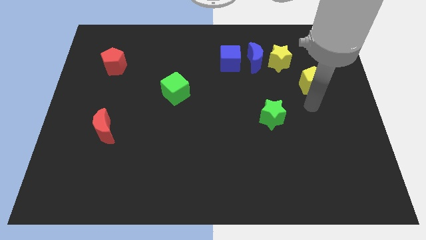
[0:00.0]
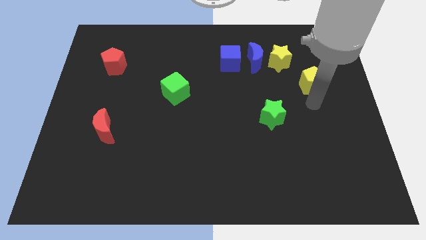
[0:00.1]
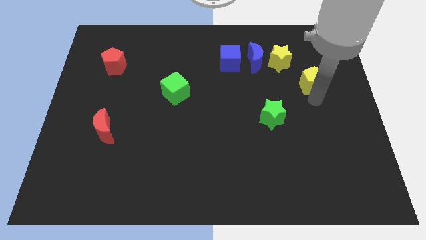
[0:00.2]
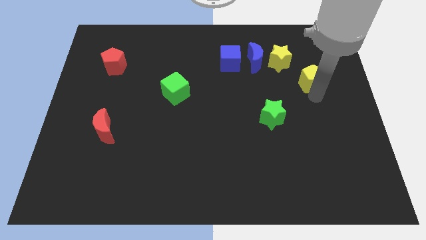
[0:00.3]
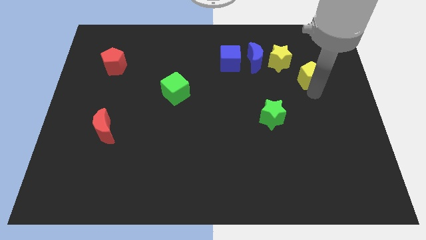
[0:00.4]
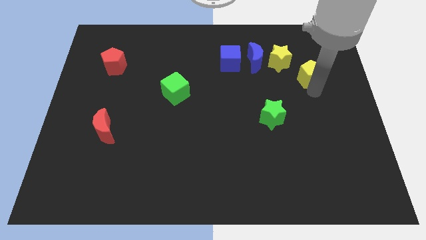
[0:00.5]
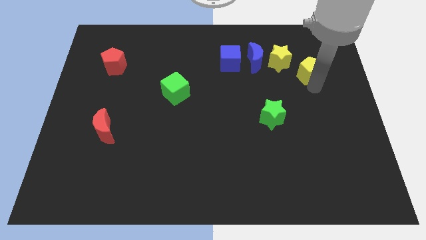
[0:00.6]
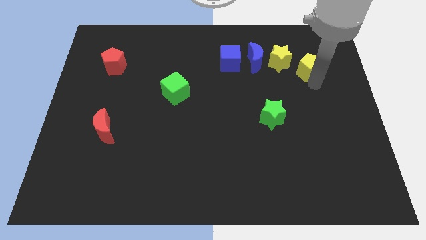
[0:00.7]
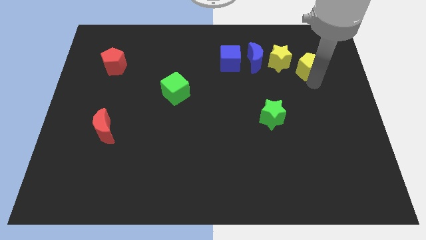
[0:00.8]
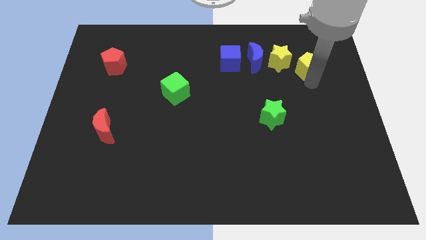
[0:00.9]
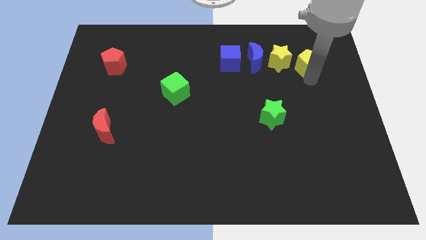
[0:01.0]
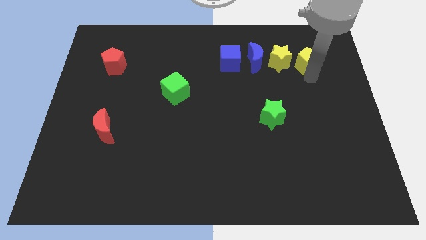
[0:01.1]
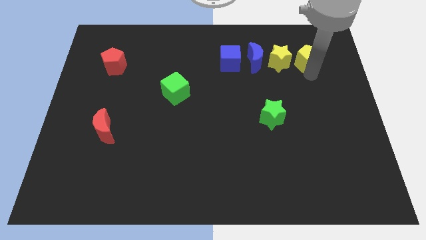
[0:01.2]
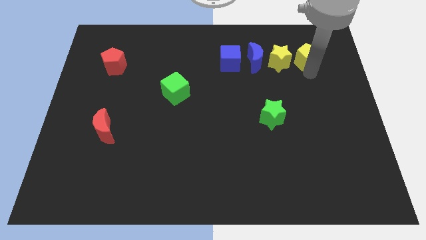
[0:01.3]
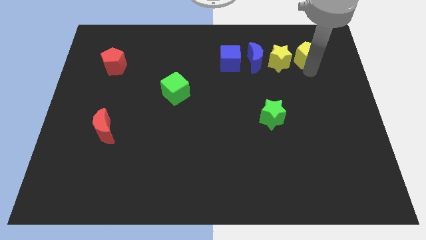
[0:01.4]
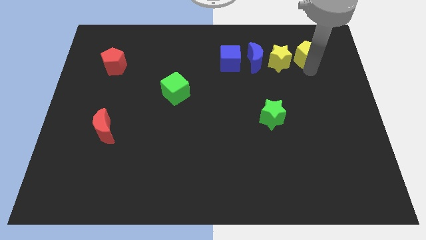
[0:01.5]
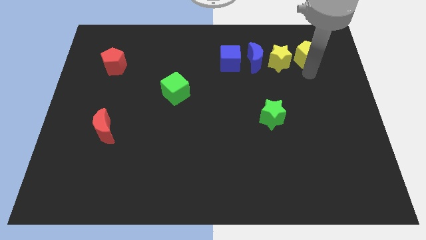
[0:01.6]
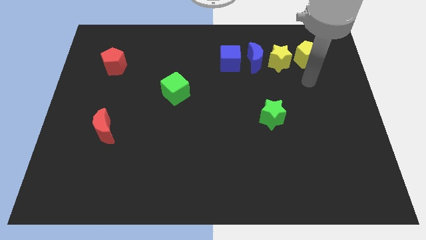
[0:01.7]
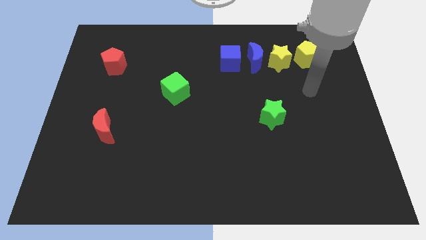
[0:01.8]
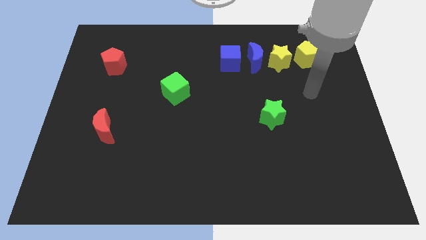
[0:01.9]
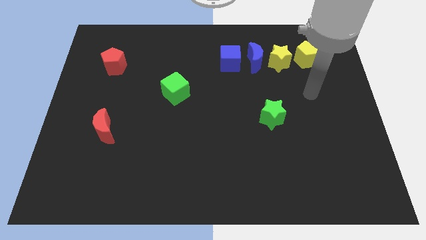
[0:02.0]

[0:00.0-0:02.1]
push the yellow pentagon to the right of the yellow star

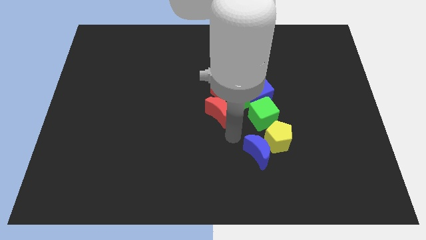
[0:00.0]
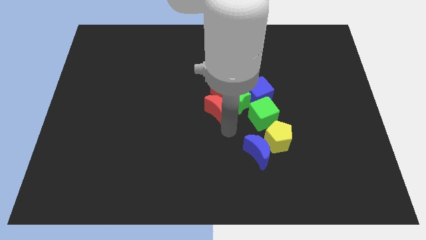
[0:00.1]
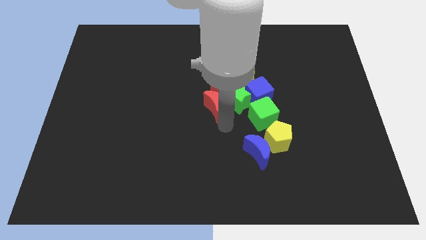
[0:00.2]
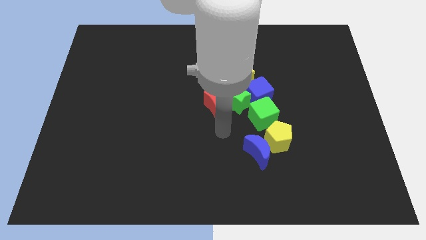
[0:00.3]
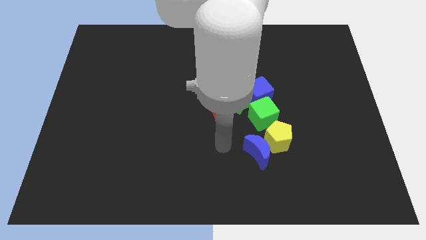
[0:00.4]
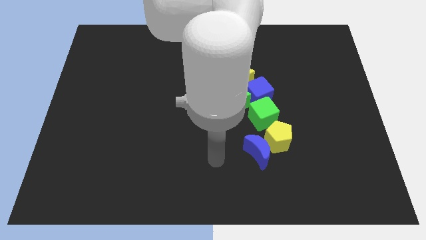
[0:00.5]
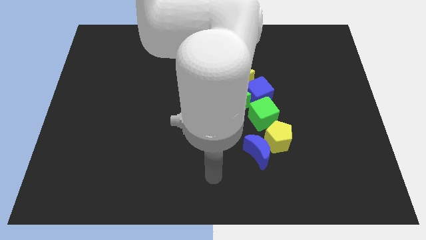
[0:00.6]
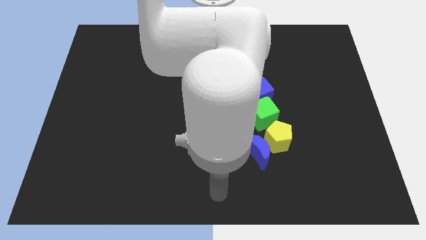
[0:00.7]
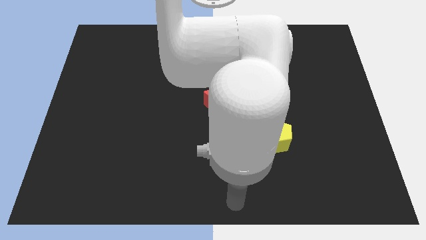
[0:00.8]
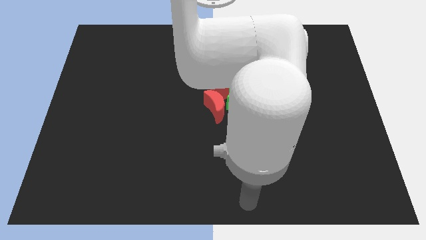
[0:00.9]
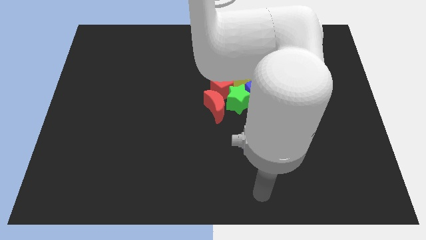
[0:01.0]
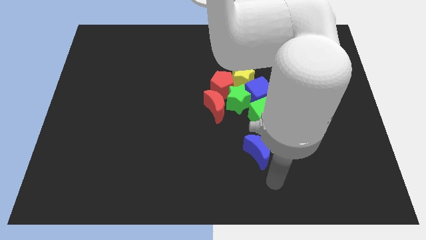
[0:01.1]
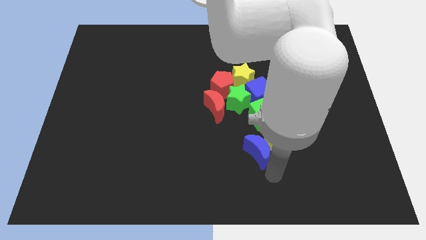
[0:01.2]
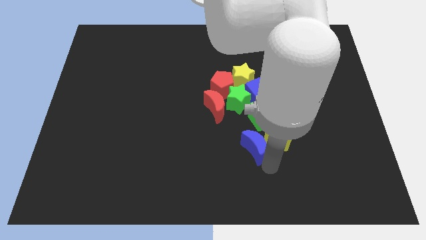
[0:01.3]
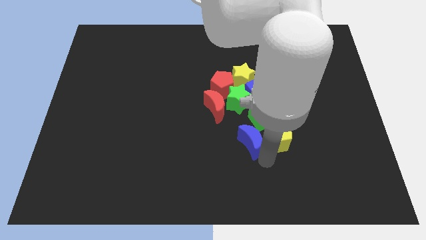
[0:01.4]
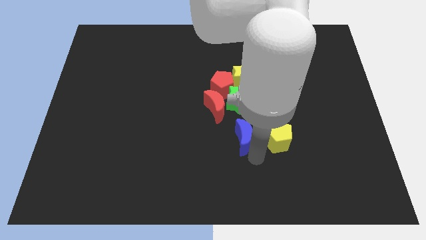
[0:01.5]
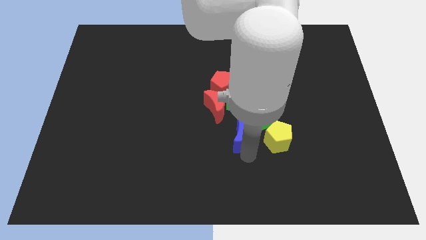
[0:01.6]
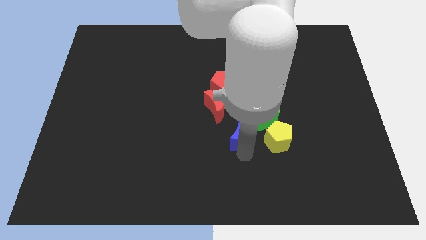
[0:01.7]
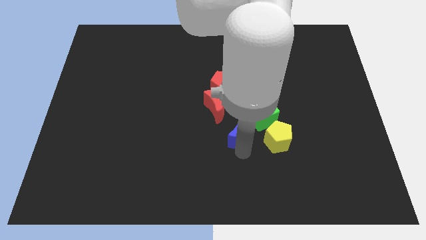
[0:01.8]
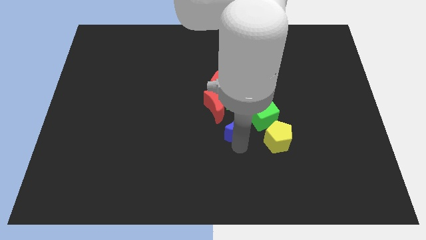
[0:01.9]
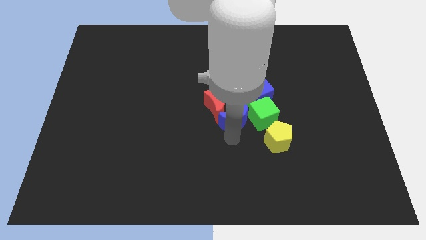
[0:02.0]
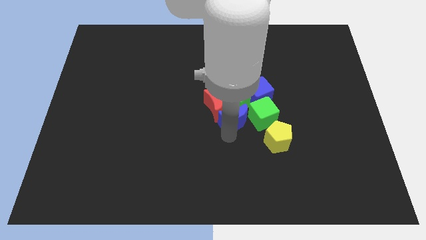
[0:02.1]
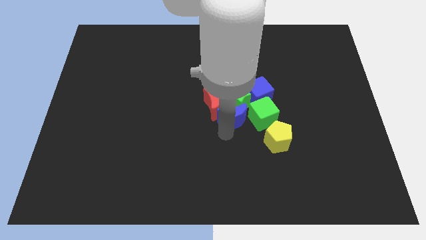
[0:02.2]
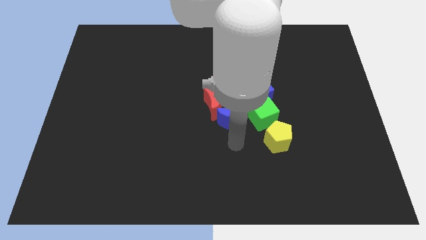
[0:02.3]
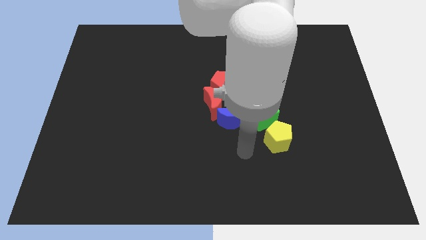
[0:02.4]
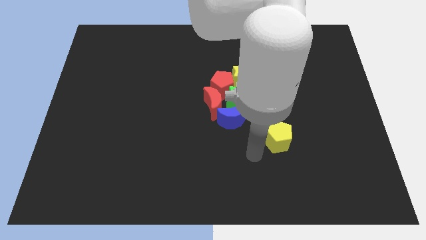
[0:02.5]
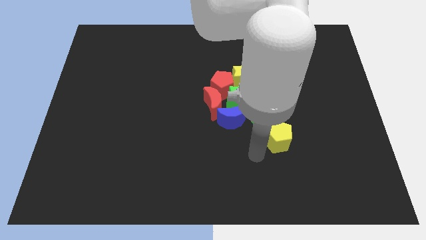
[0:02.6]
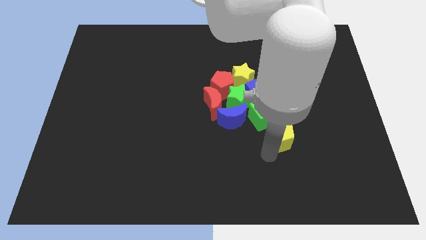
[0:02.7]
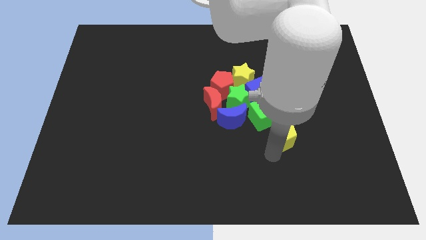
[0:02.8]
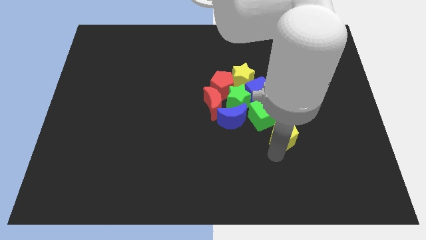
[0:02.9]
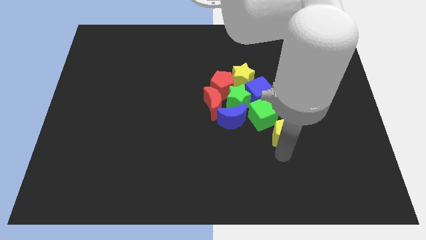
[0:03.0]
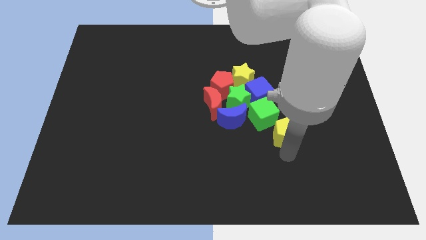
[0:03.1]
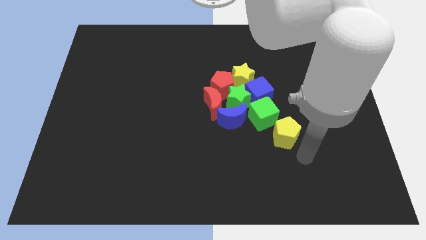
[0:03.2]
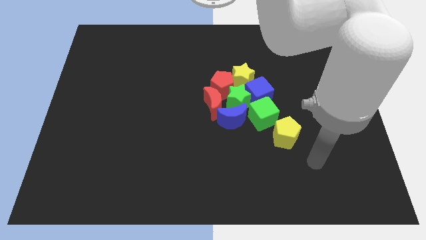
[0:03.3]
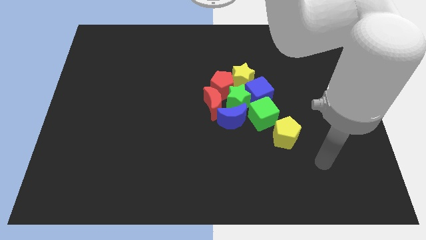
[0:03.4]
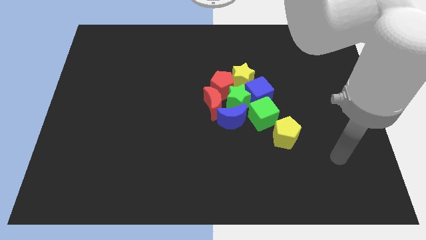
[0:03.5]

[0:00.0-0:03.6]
push the red crescent into the red pentagon

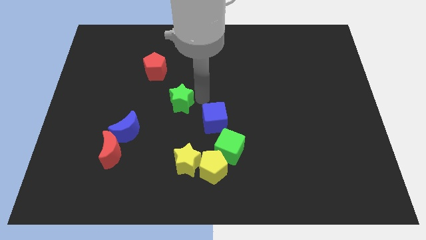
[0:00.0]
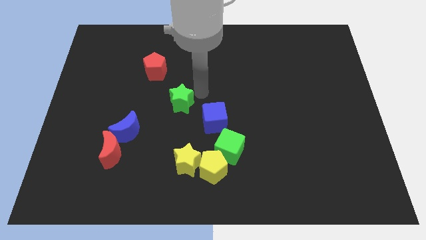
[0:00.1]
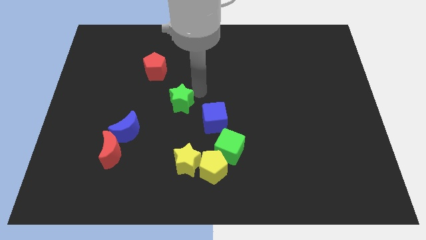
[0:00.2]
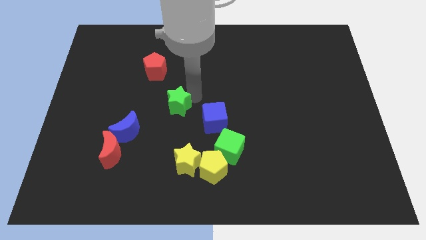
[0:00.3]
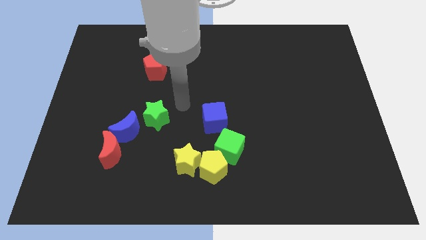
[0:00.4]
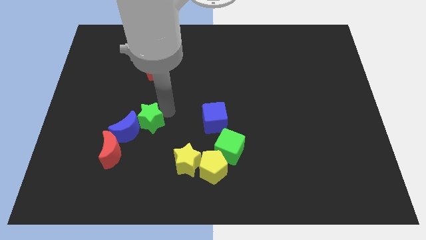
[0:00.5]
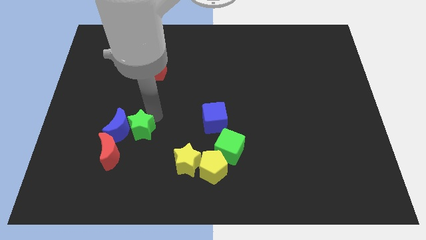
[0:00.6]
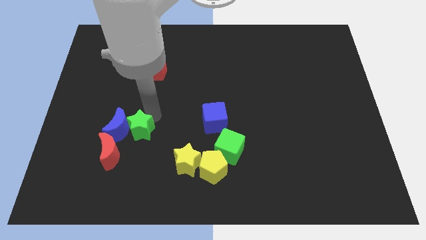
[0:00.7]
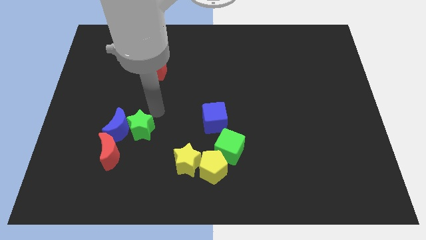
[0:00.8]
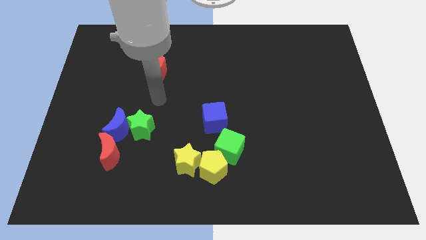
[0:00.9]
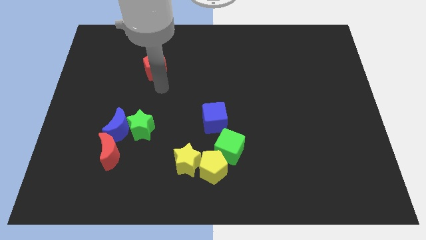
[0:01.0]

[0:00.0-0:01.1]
move the green star into the blue crescent

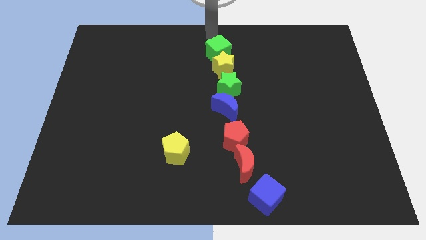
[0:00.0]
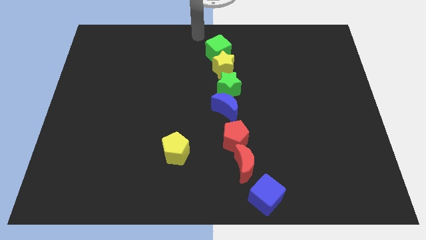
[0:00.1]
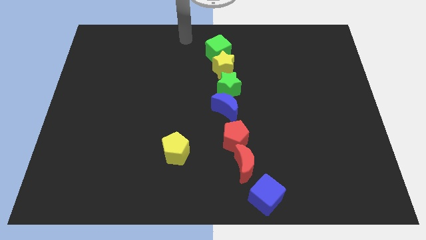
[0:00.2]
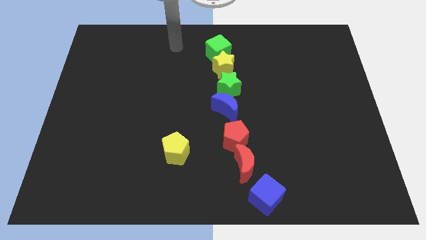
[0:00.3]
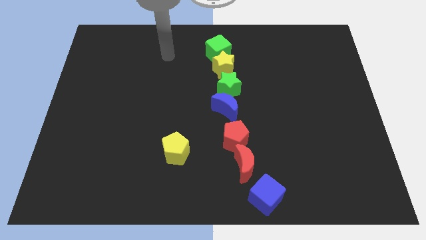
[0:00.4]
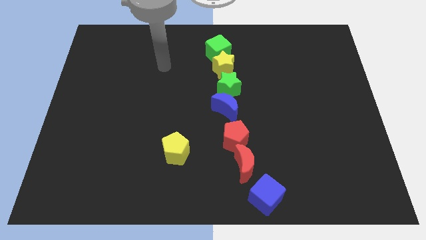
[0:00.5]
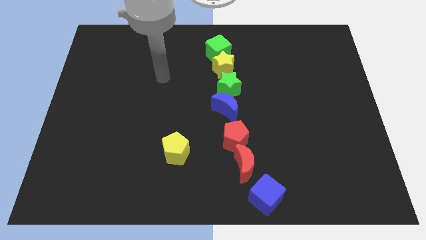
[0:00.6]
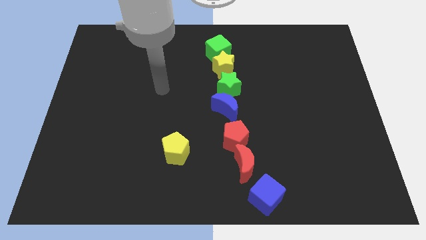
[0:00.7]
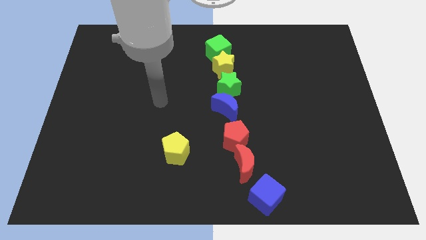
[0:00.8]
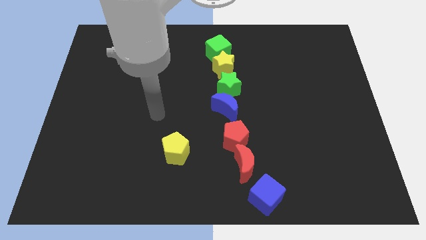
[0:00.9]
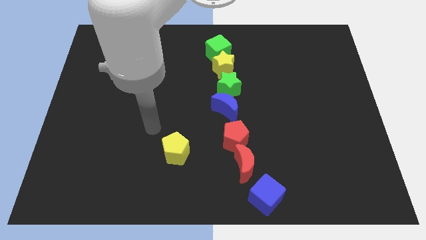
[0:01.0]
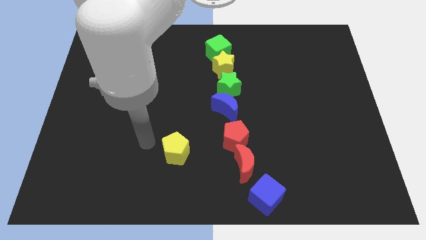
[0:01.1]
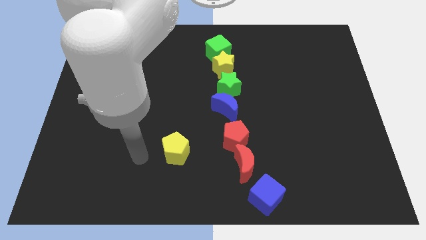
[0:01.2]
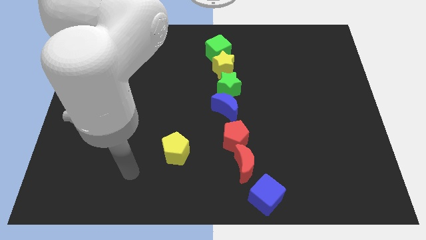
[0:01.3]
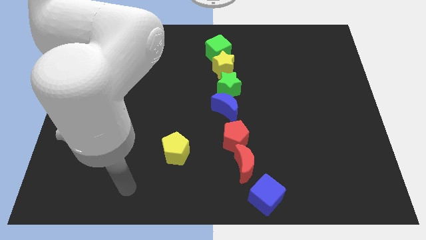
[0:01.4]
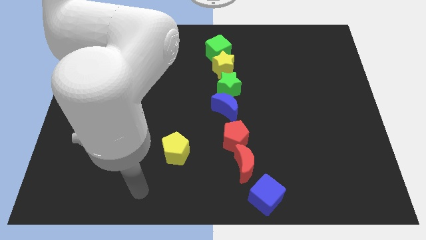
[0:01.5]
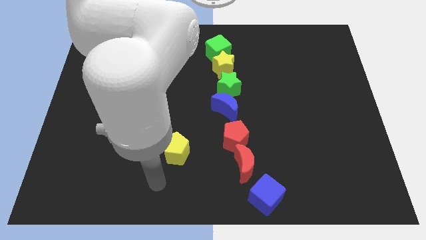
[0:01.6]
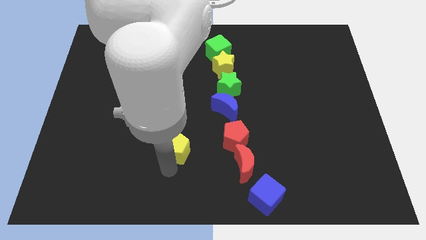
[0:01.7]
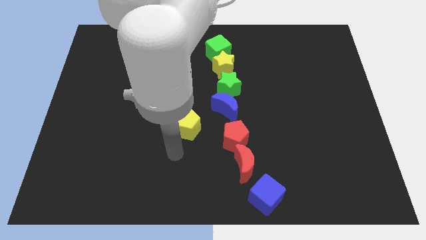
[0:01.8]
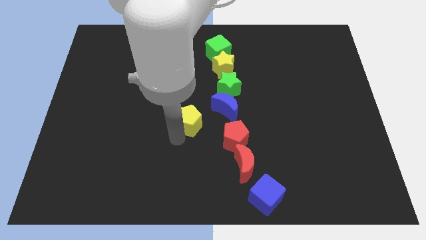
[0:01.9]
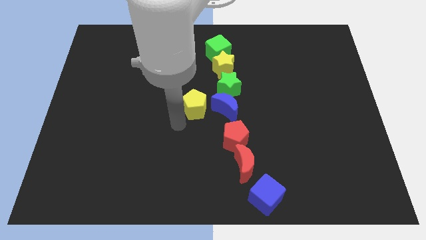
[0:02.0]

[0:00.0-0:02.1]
push the yellow pentagon at the left of the blue crescent

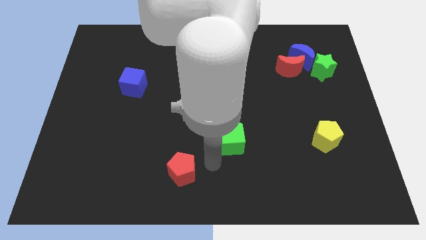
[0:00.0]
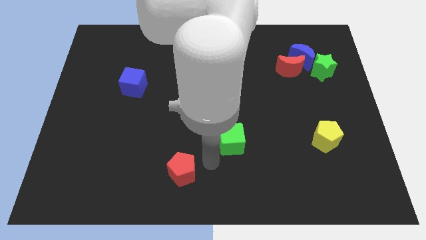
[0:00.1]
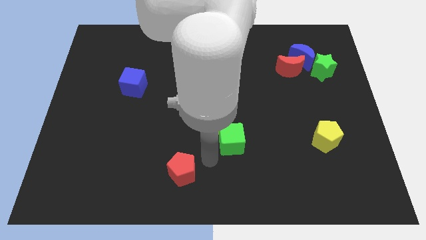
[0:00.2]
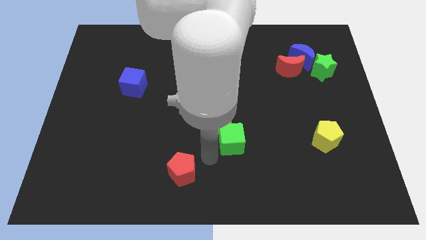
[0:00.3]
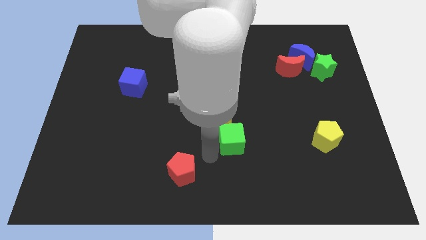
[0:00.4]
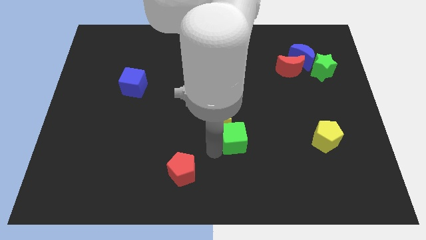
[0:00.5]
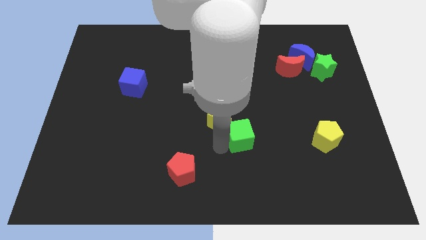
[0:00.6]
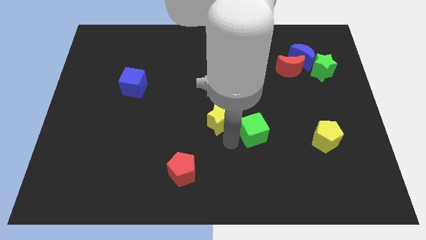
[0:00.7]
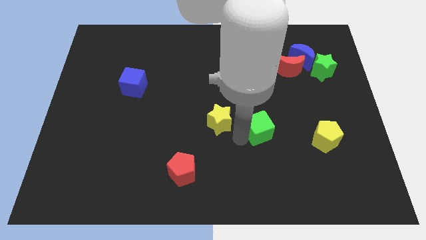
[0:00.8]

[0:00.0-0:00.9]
place the green cube in between the yellow pentagon and yellow star
